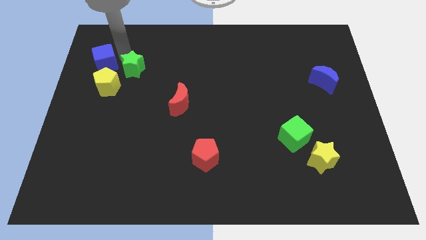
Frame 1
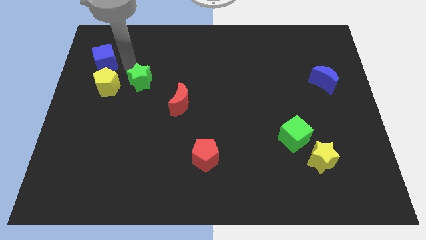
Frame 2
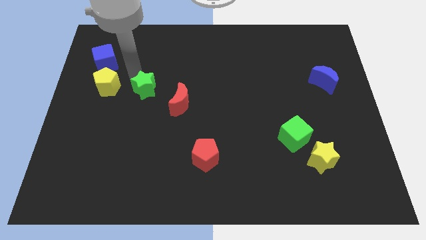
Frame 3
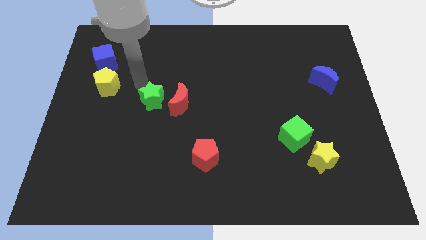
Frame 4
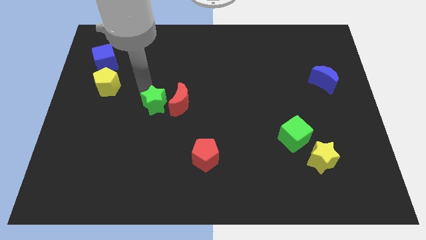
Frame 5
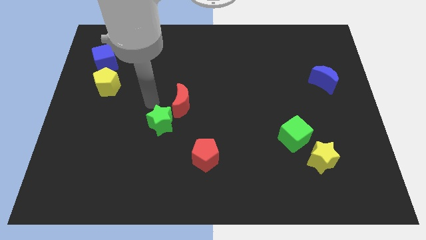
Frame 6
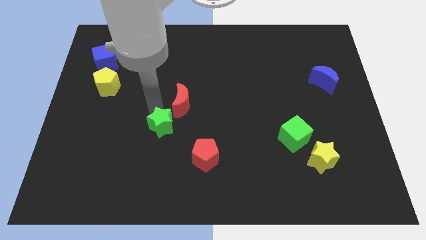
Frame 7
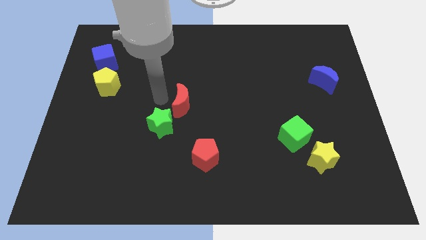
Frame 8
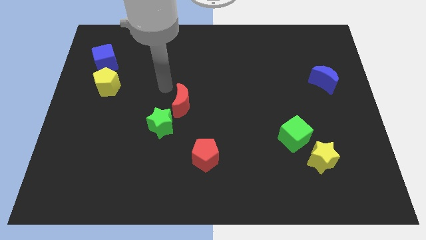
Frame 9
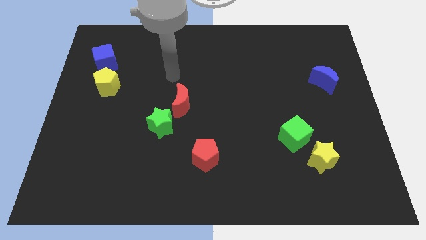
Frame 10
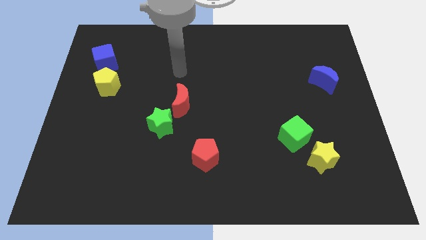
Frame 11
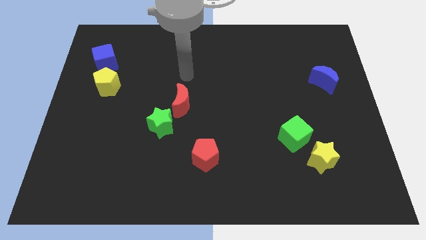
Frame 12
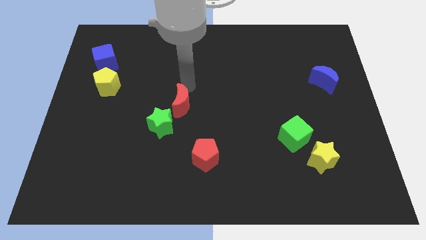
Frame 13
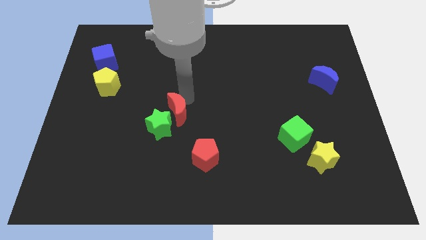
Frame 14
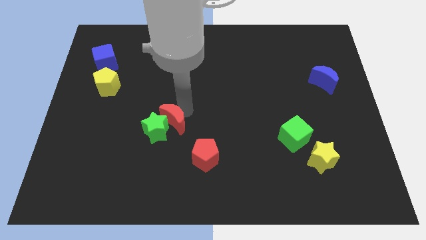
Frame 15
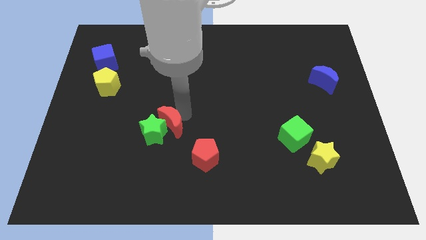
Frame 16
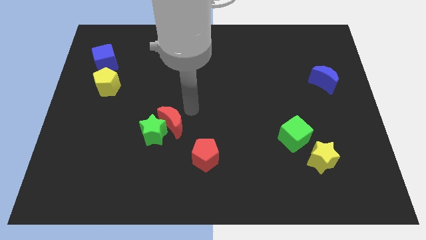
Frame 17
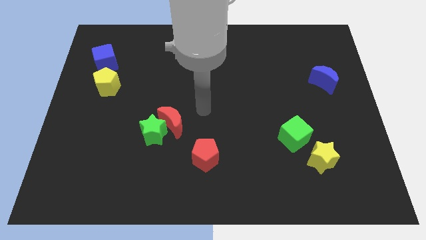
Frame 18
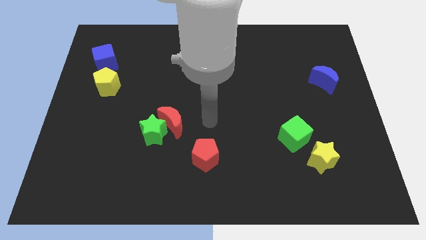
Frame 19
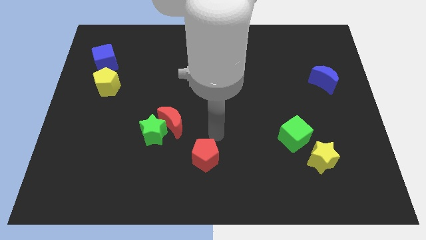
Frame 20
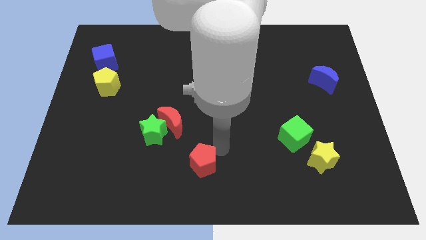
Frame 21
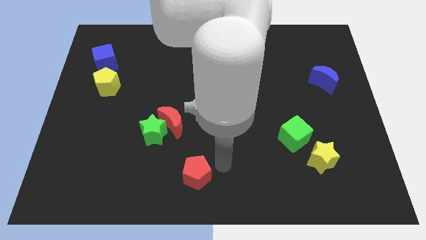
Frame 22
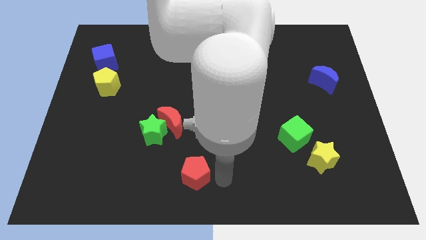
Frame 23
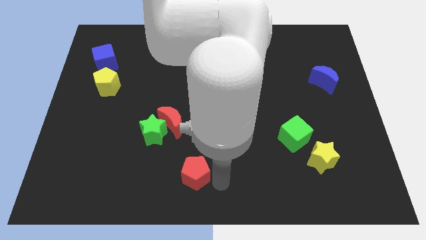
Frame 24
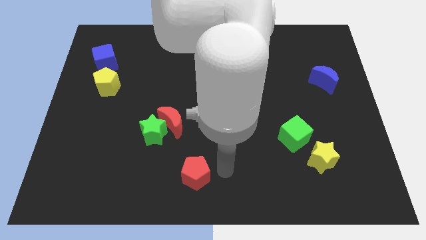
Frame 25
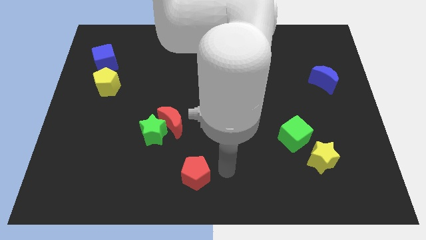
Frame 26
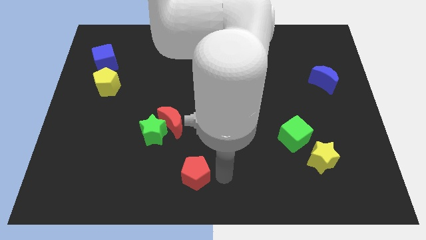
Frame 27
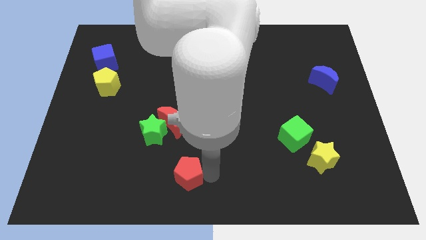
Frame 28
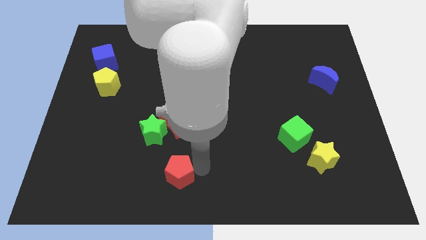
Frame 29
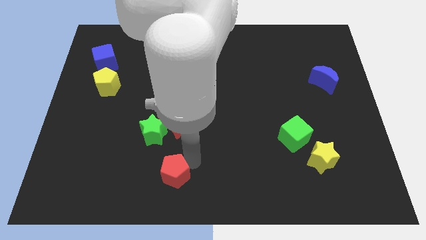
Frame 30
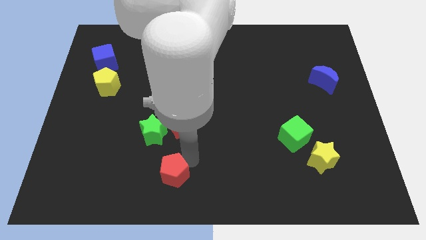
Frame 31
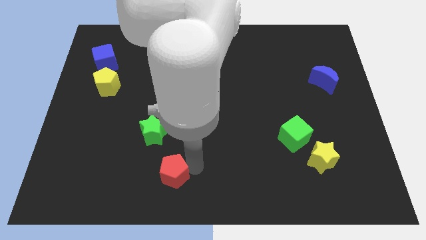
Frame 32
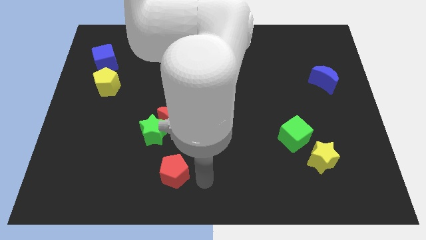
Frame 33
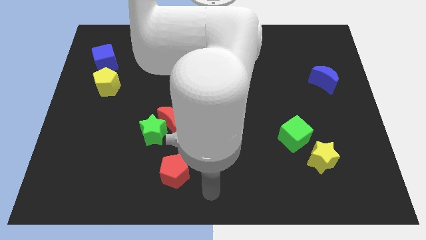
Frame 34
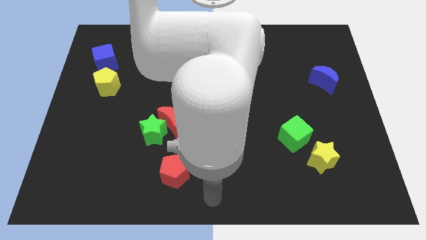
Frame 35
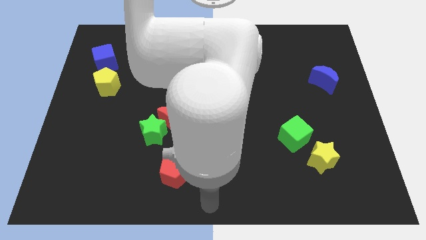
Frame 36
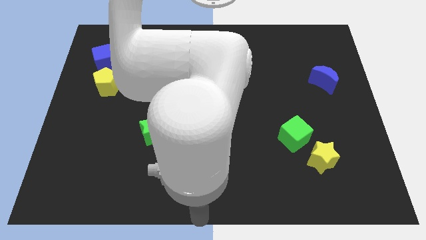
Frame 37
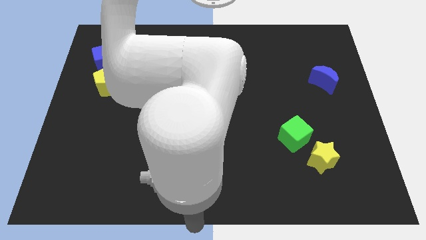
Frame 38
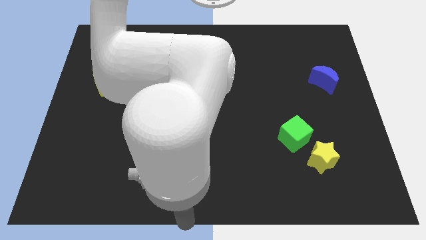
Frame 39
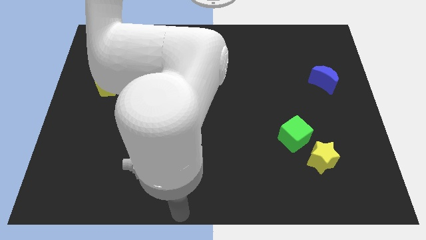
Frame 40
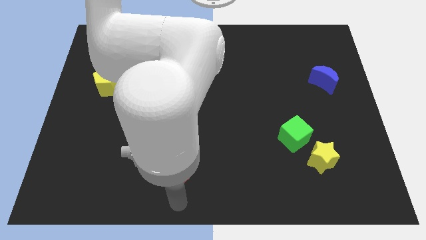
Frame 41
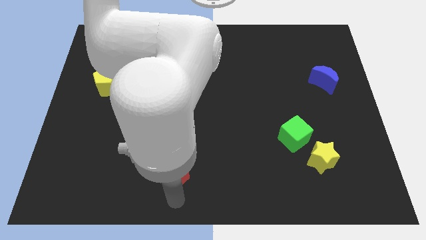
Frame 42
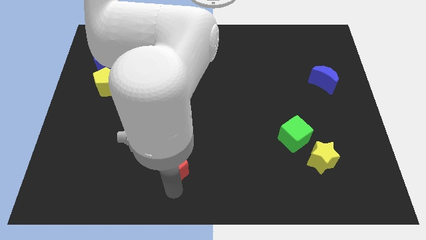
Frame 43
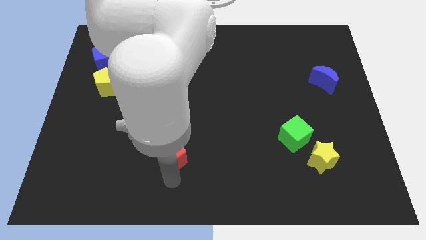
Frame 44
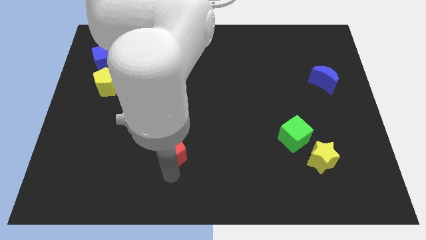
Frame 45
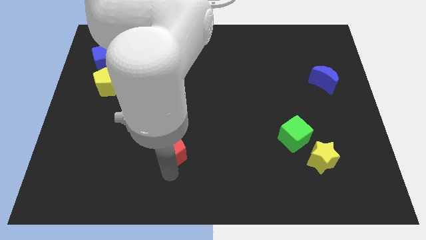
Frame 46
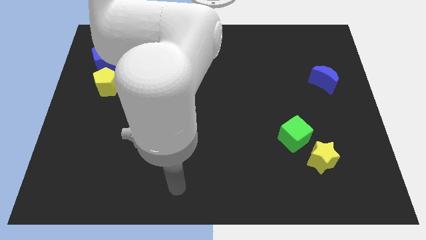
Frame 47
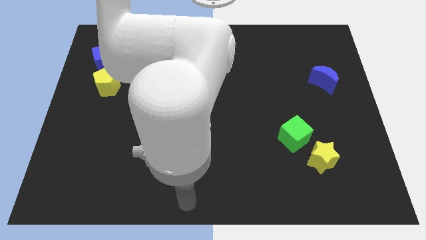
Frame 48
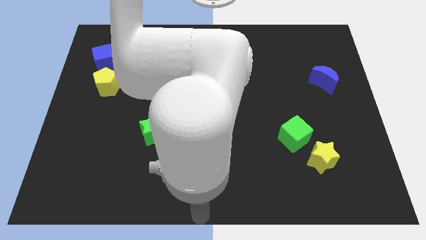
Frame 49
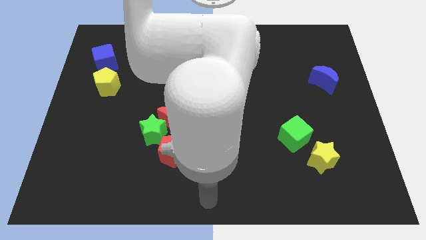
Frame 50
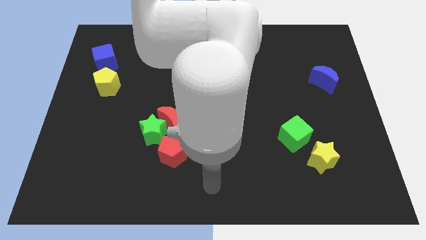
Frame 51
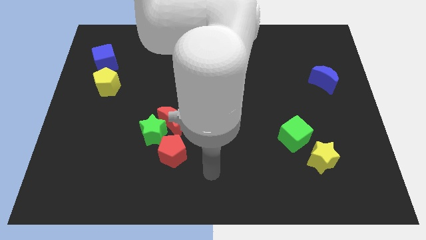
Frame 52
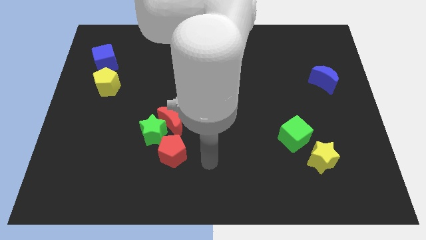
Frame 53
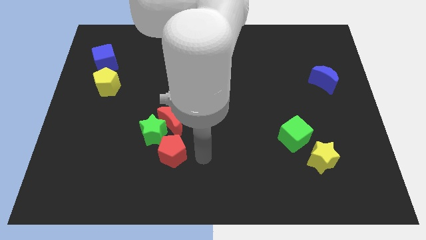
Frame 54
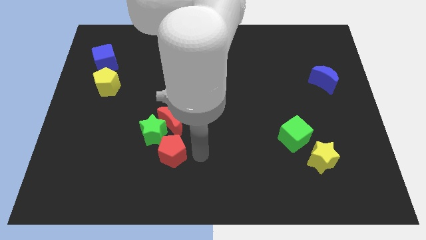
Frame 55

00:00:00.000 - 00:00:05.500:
move red pentagon to the green star and red moon

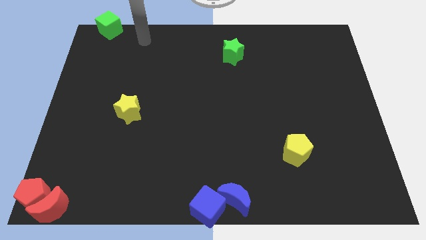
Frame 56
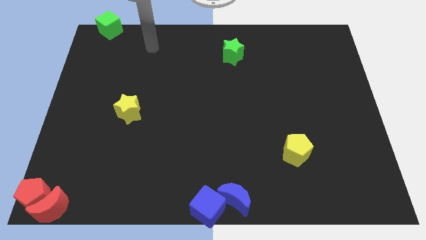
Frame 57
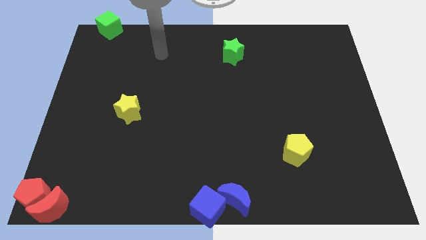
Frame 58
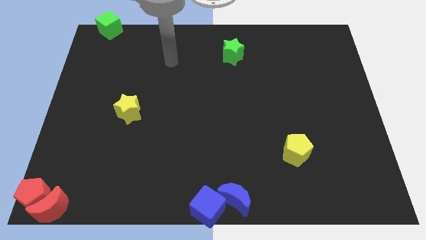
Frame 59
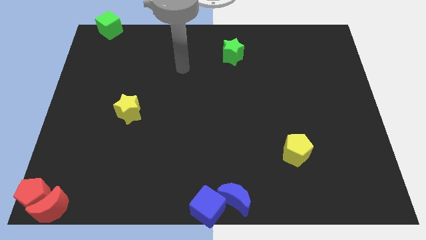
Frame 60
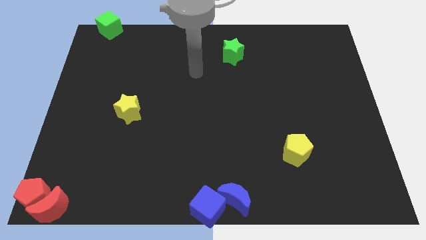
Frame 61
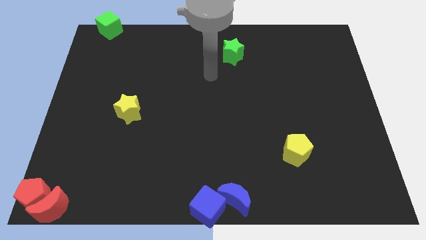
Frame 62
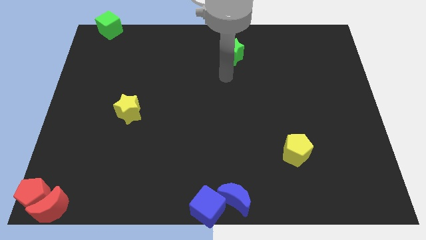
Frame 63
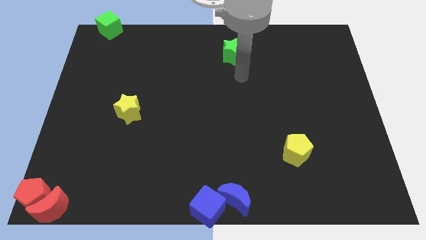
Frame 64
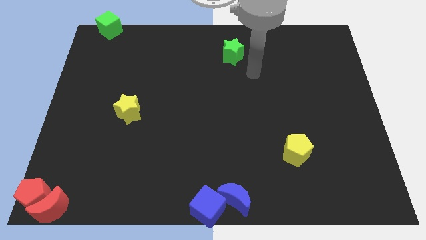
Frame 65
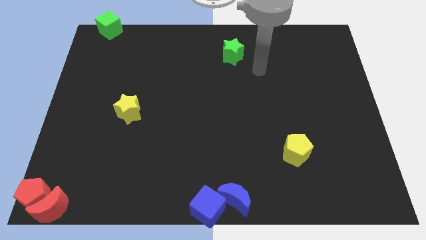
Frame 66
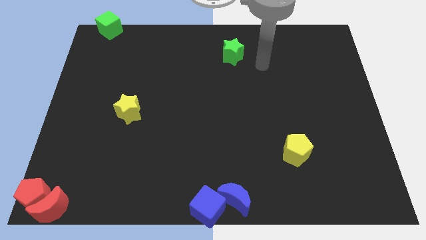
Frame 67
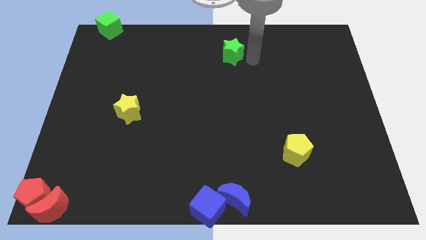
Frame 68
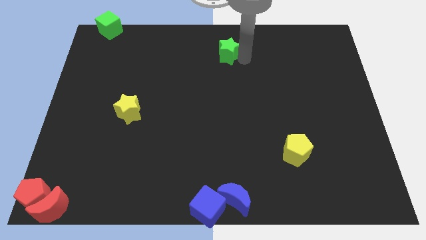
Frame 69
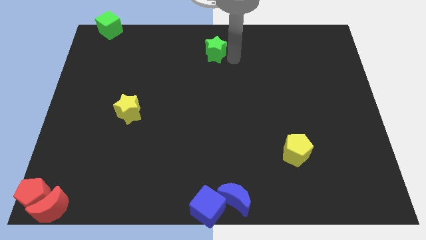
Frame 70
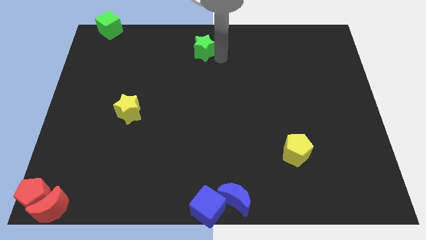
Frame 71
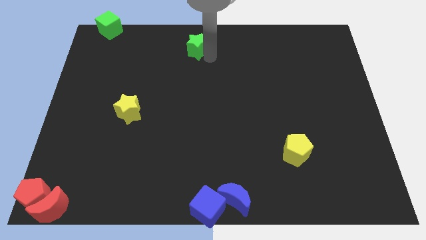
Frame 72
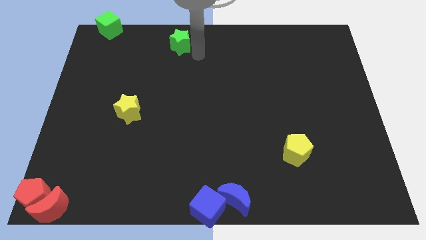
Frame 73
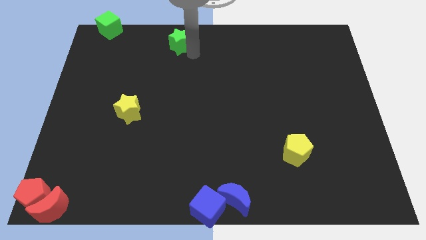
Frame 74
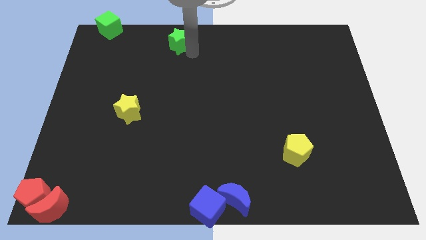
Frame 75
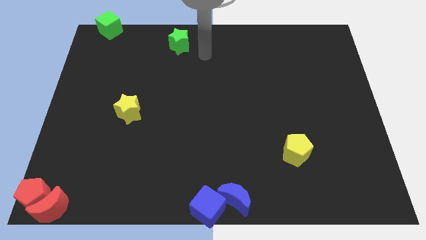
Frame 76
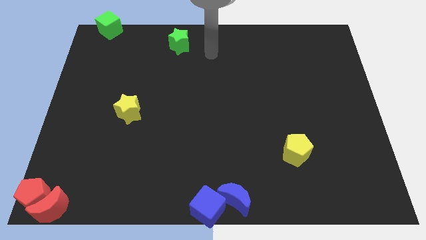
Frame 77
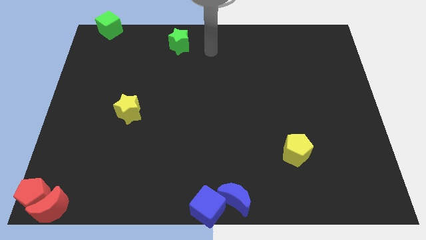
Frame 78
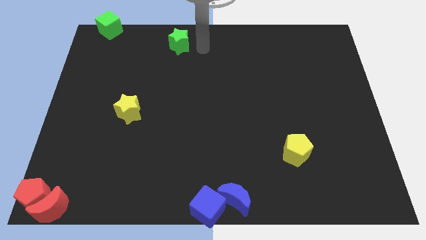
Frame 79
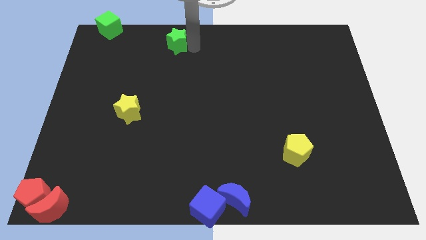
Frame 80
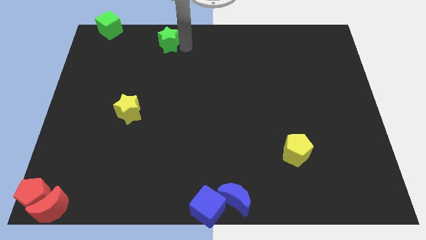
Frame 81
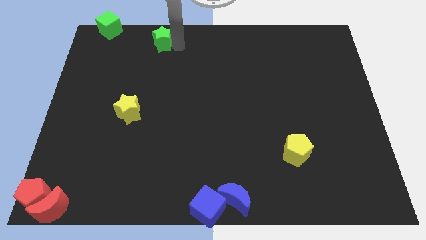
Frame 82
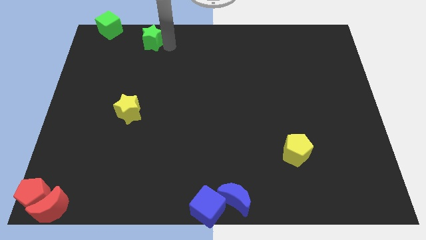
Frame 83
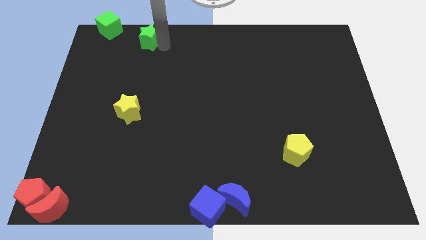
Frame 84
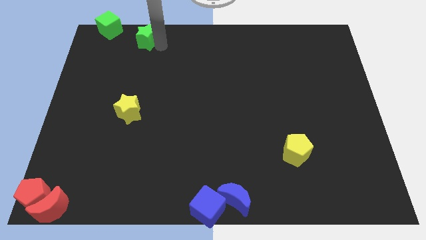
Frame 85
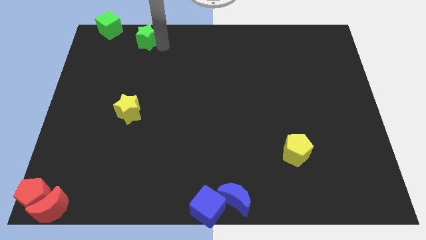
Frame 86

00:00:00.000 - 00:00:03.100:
move the green star to the top of the yellow star

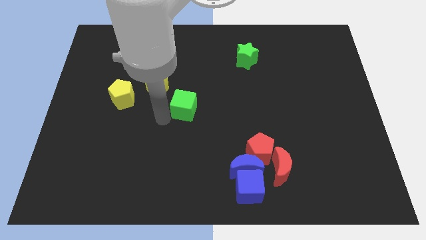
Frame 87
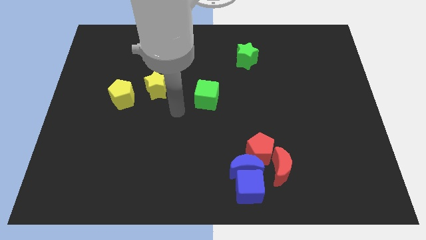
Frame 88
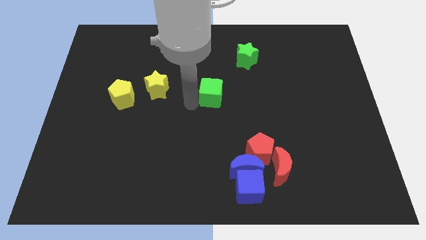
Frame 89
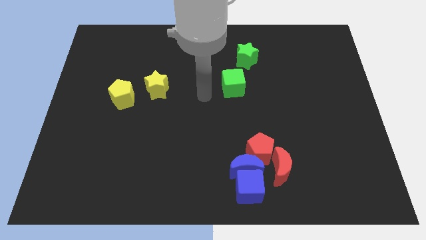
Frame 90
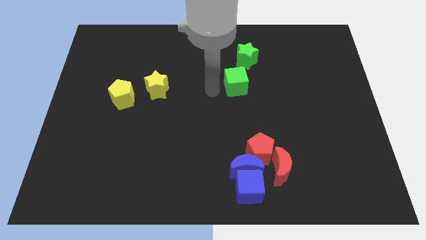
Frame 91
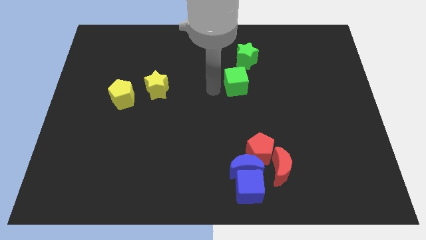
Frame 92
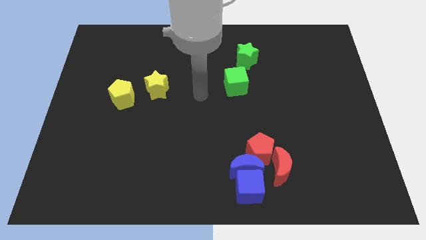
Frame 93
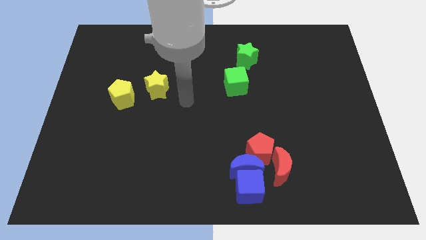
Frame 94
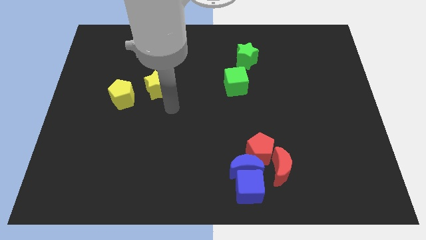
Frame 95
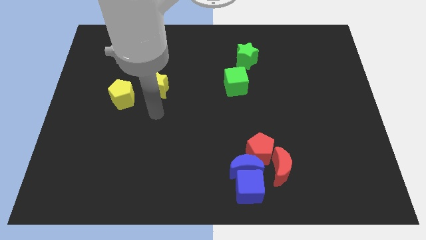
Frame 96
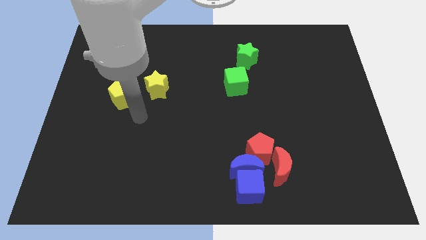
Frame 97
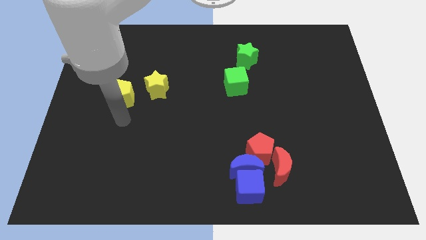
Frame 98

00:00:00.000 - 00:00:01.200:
put the green cube to the bottom left side of the green star
